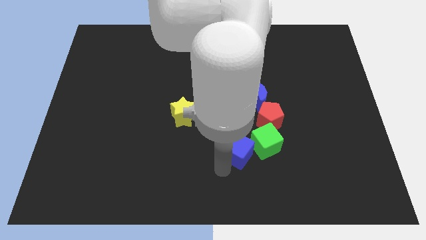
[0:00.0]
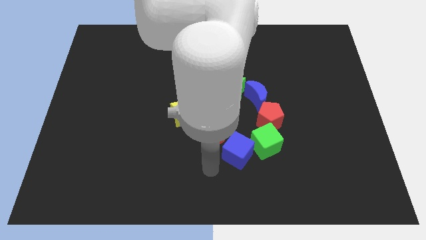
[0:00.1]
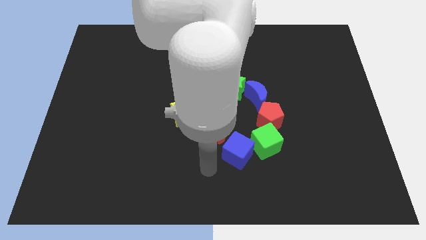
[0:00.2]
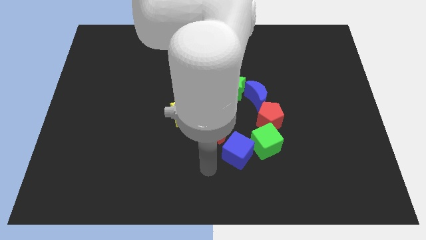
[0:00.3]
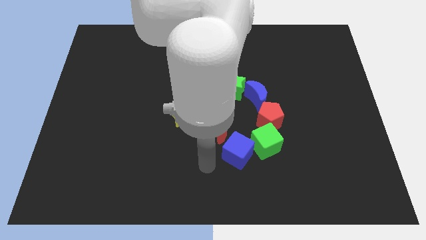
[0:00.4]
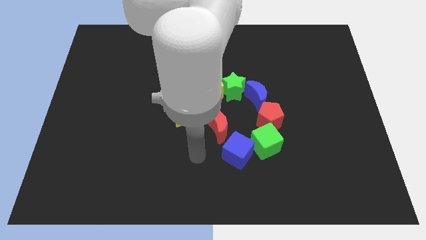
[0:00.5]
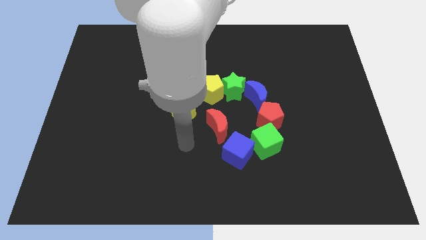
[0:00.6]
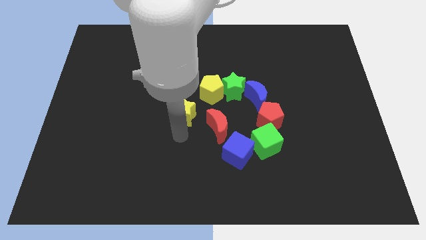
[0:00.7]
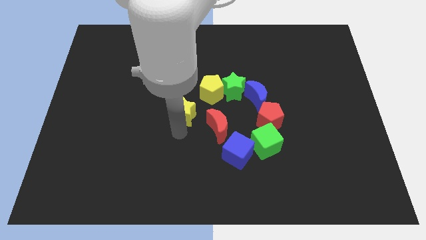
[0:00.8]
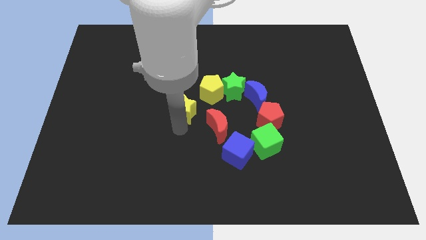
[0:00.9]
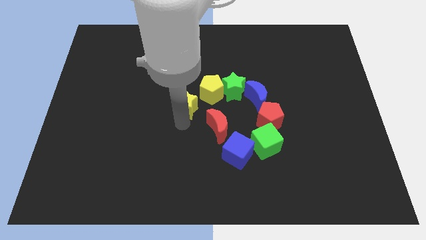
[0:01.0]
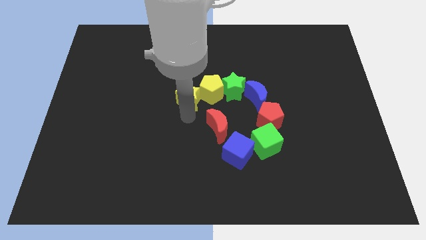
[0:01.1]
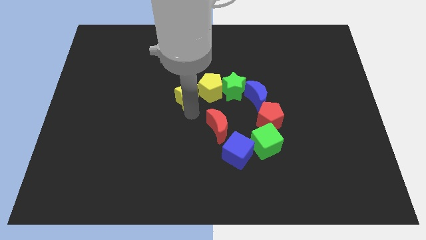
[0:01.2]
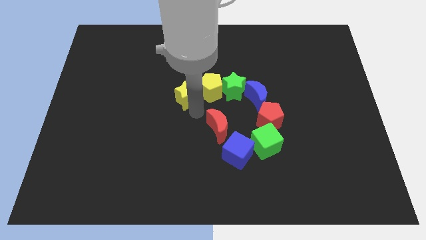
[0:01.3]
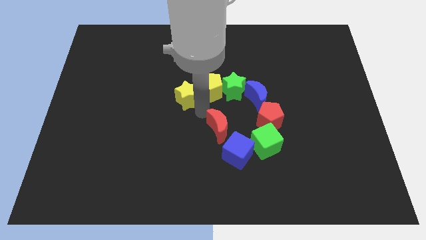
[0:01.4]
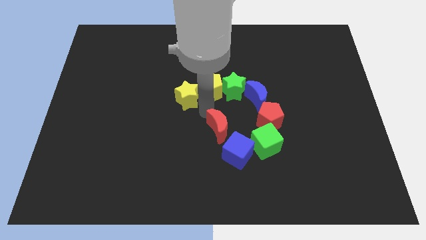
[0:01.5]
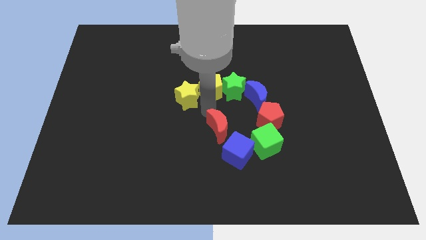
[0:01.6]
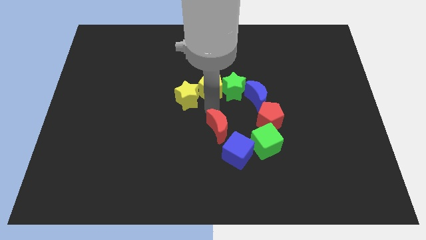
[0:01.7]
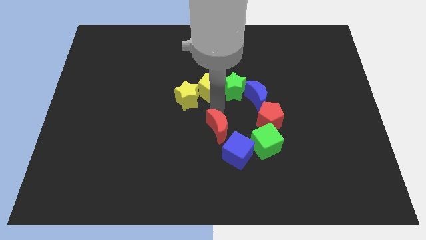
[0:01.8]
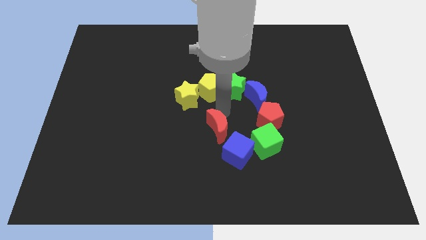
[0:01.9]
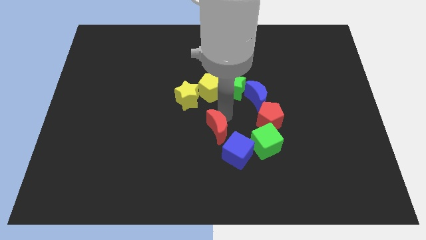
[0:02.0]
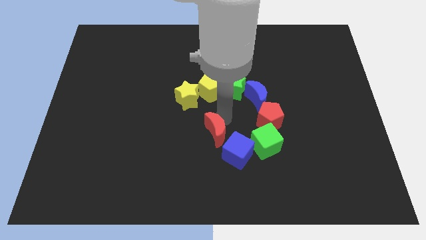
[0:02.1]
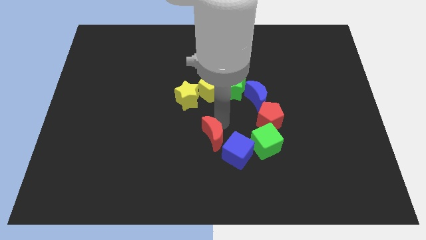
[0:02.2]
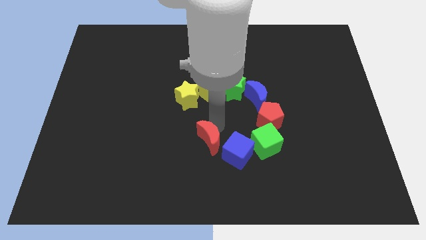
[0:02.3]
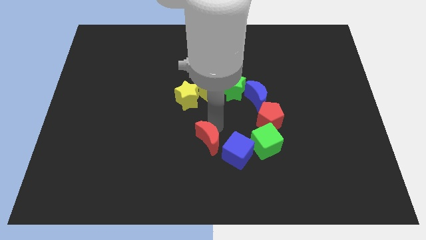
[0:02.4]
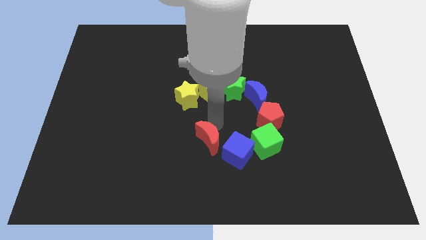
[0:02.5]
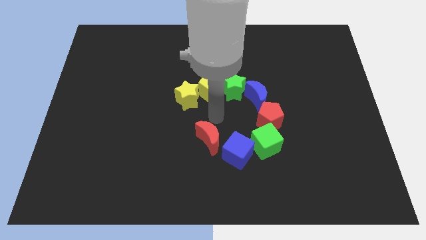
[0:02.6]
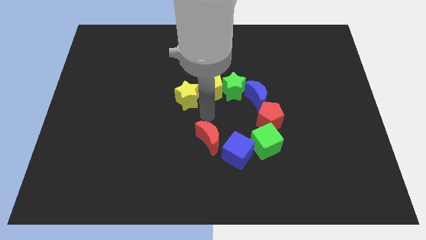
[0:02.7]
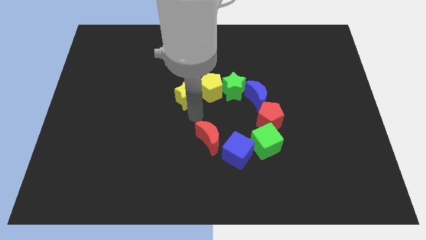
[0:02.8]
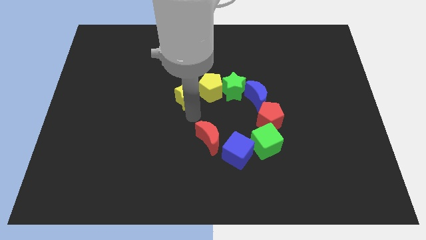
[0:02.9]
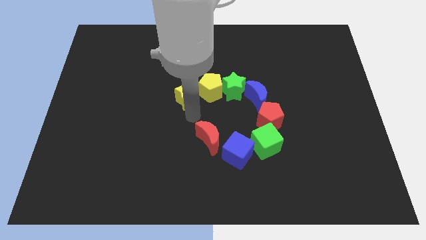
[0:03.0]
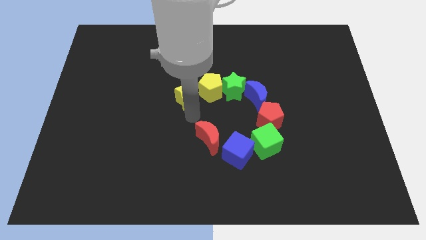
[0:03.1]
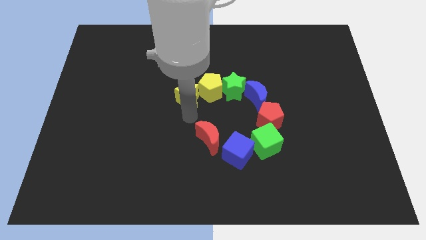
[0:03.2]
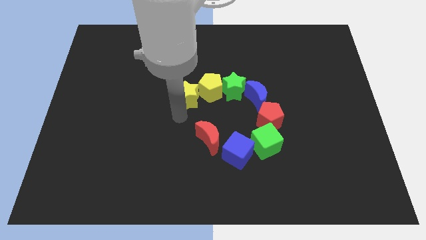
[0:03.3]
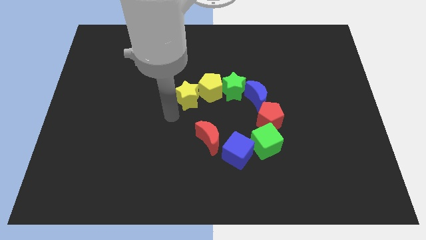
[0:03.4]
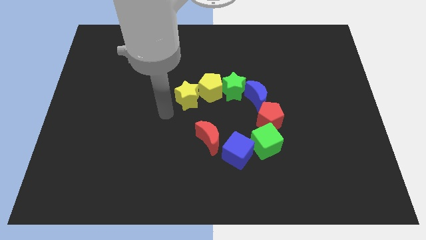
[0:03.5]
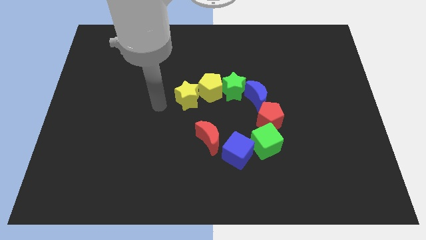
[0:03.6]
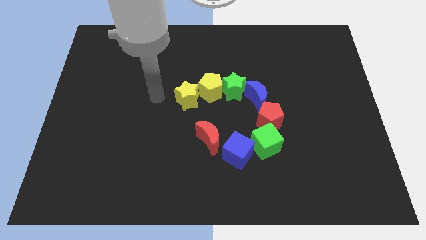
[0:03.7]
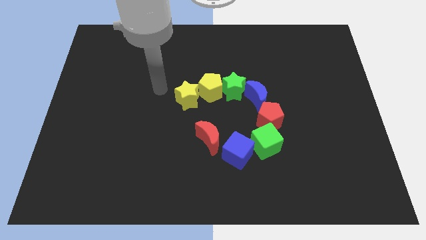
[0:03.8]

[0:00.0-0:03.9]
move the red crescent to the left of blue cube

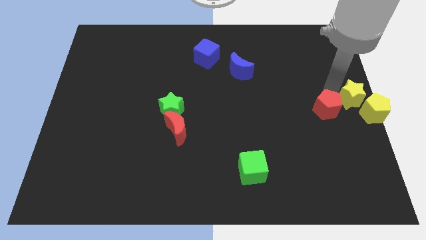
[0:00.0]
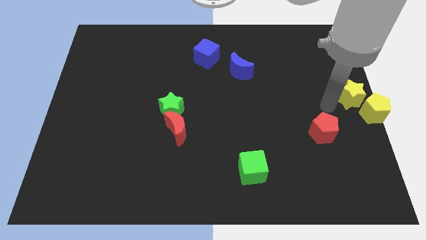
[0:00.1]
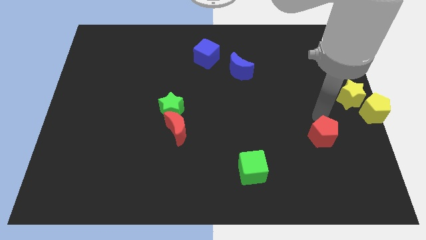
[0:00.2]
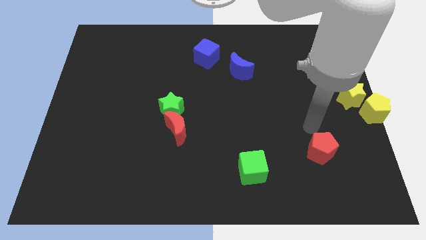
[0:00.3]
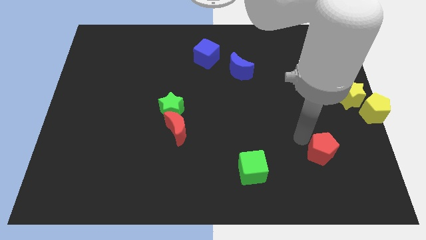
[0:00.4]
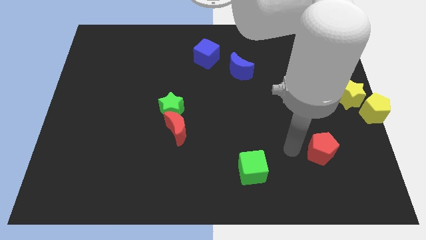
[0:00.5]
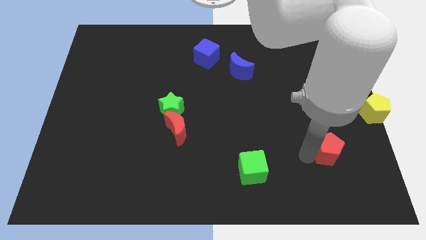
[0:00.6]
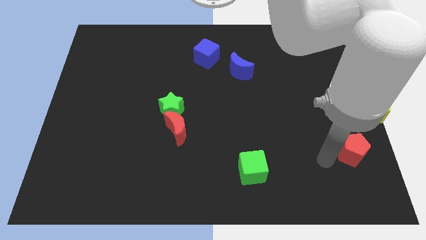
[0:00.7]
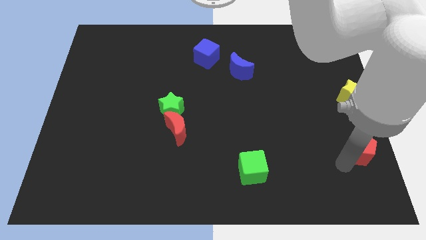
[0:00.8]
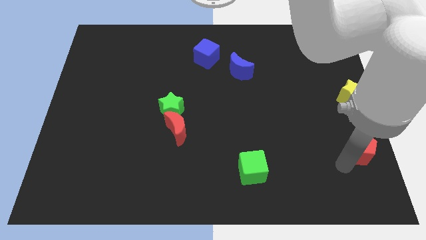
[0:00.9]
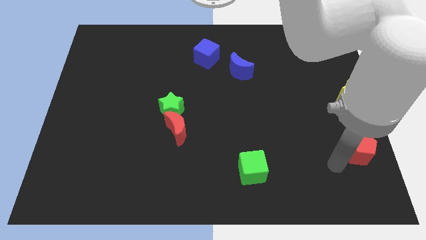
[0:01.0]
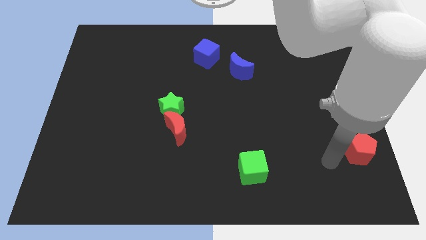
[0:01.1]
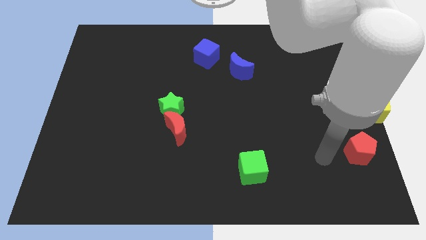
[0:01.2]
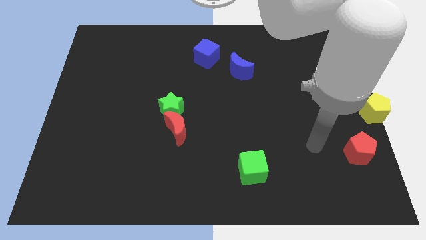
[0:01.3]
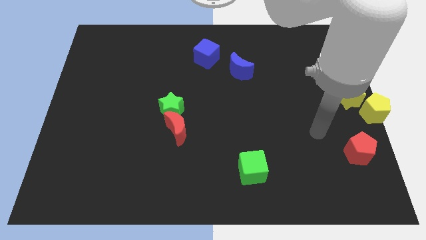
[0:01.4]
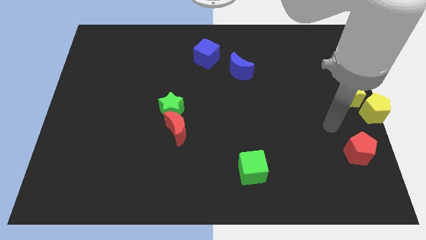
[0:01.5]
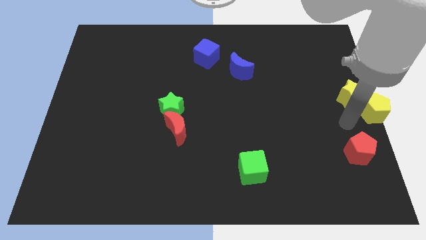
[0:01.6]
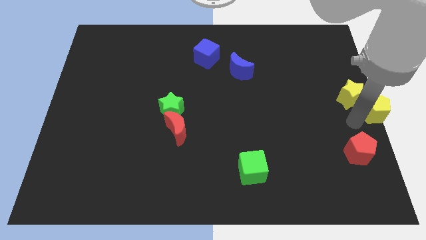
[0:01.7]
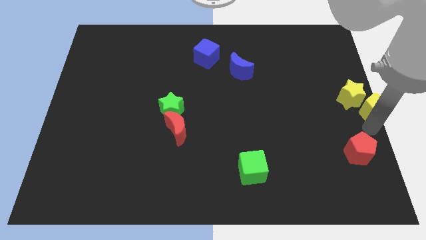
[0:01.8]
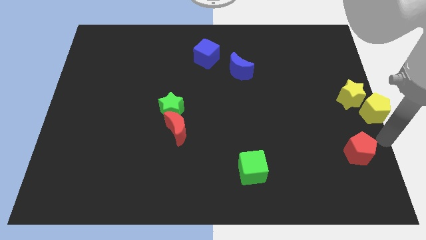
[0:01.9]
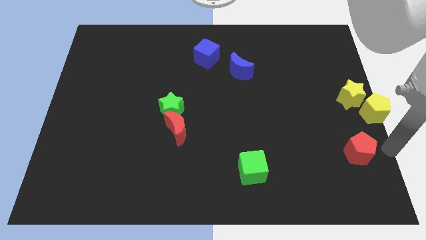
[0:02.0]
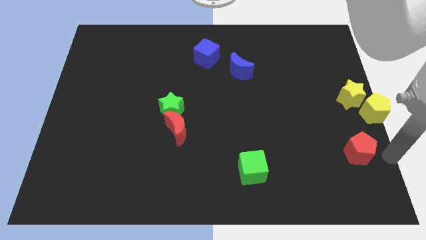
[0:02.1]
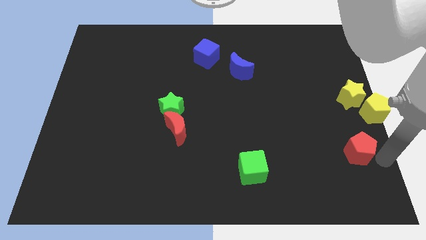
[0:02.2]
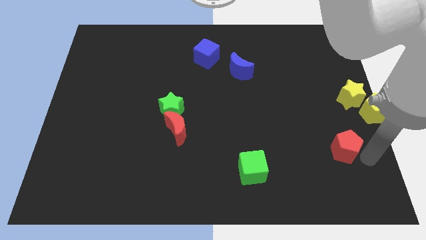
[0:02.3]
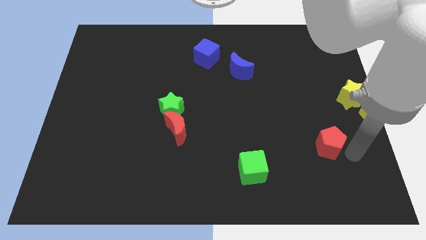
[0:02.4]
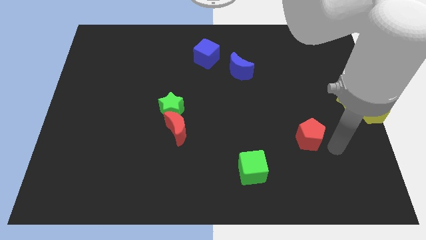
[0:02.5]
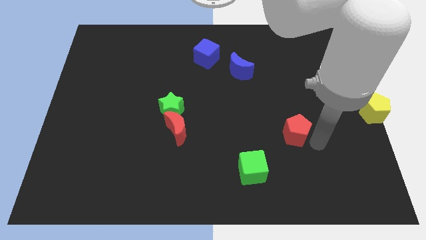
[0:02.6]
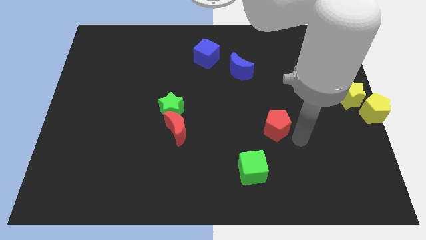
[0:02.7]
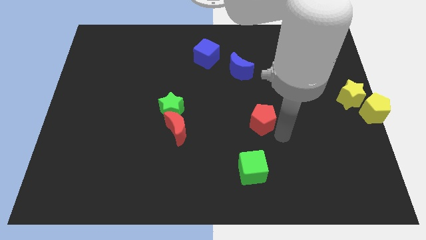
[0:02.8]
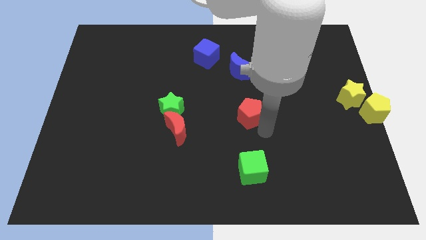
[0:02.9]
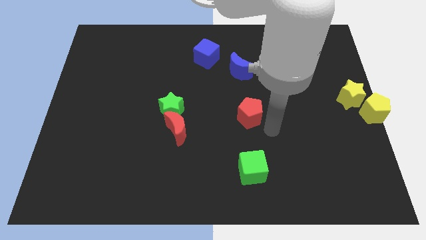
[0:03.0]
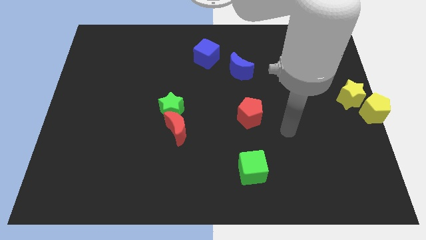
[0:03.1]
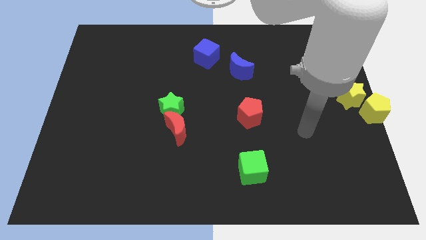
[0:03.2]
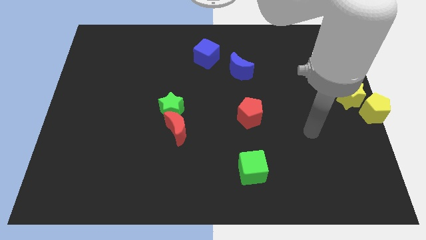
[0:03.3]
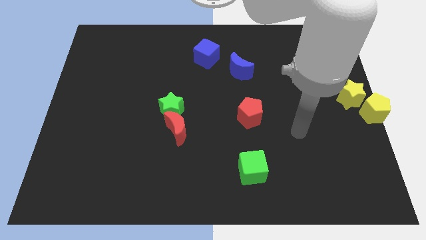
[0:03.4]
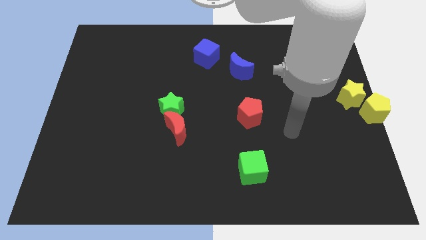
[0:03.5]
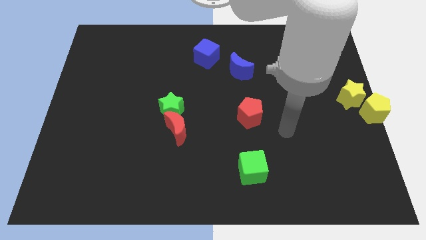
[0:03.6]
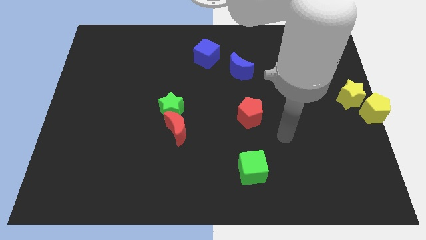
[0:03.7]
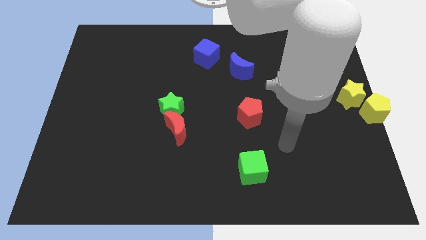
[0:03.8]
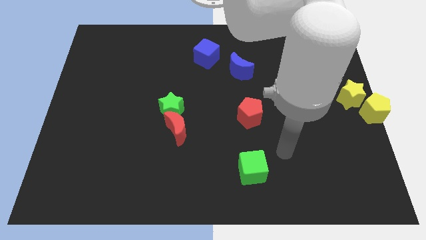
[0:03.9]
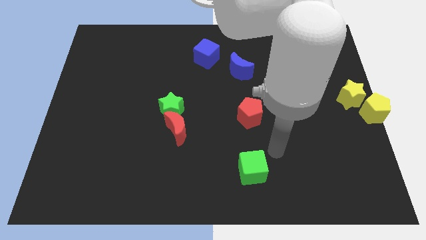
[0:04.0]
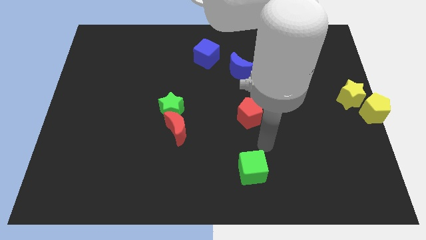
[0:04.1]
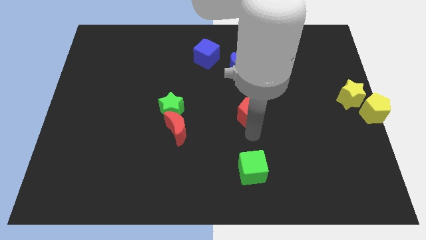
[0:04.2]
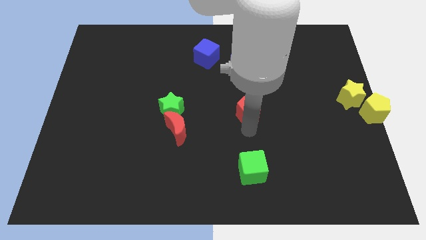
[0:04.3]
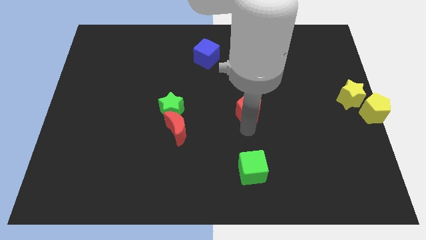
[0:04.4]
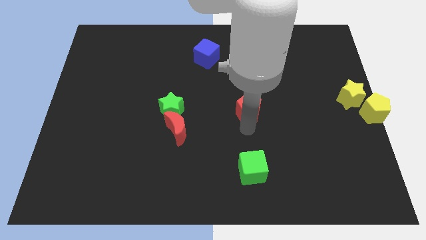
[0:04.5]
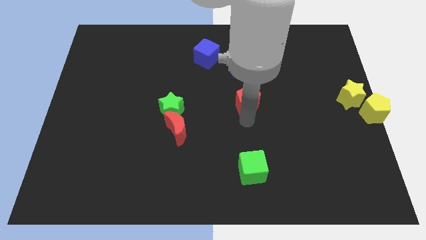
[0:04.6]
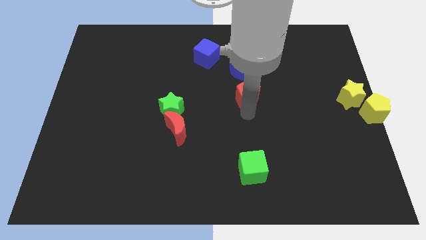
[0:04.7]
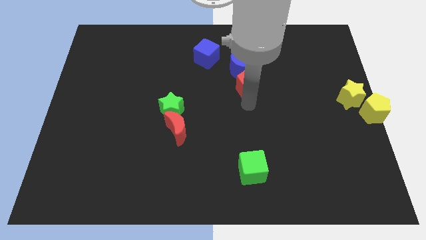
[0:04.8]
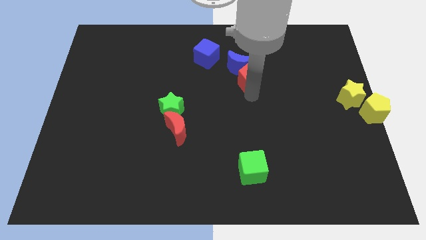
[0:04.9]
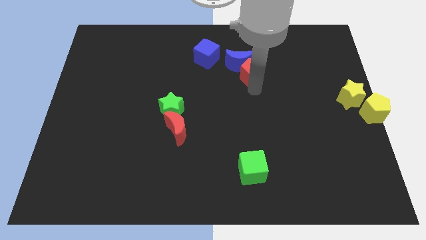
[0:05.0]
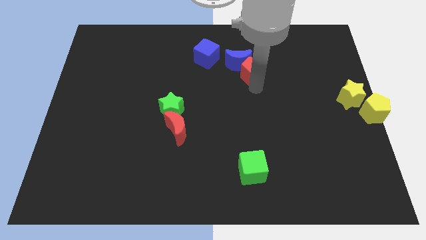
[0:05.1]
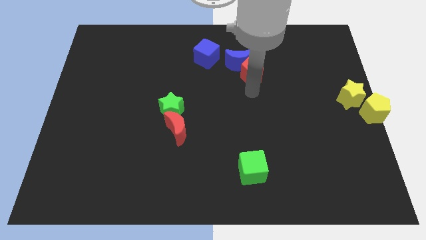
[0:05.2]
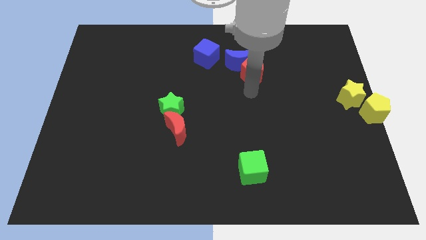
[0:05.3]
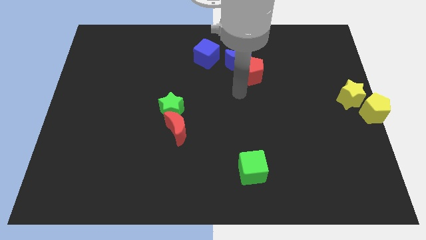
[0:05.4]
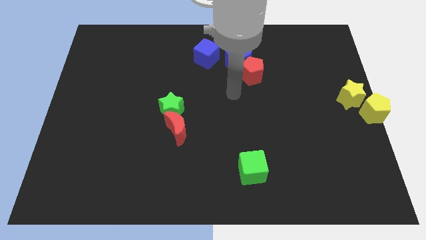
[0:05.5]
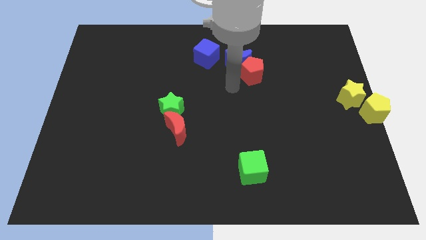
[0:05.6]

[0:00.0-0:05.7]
place the red pentagon below the blue crescent
